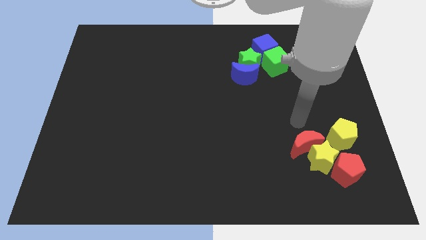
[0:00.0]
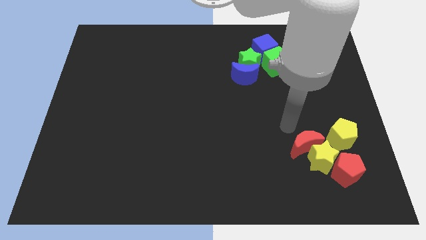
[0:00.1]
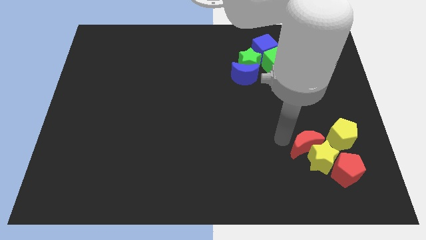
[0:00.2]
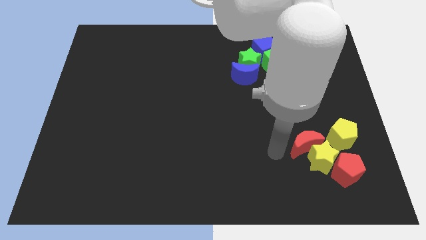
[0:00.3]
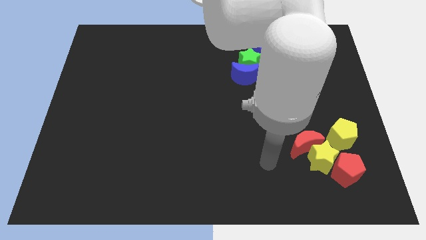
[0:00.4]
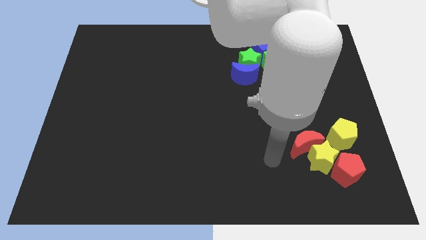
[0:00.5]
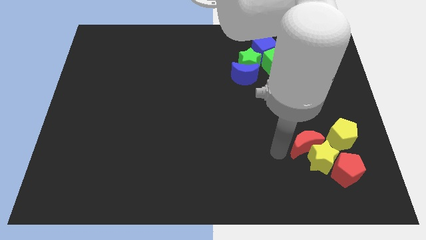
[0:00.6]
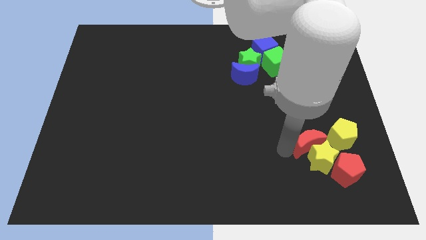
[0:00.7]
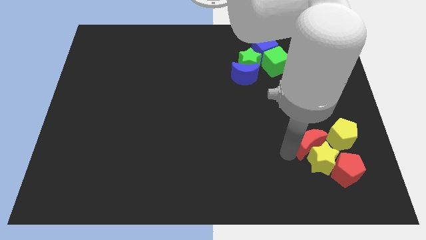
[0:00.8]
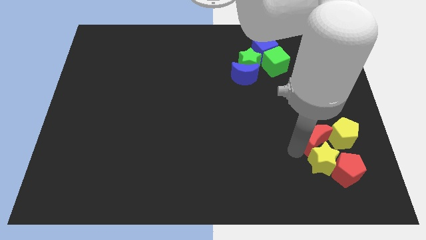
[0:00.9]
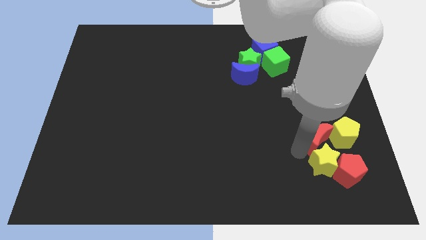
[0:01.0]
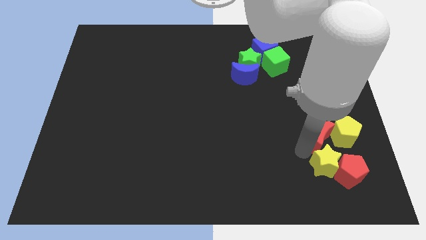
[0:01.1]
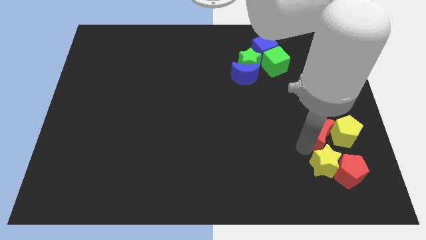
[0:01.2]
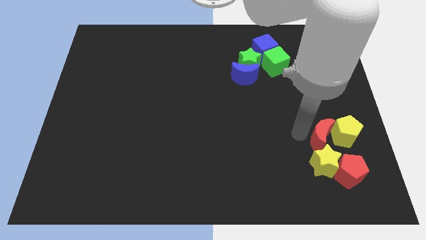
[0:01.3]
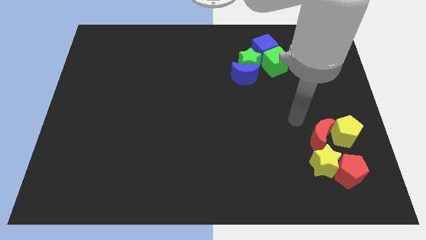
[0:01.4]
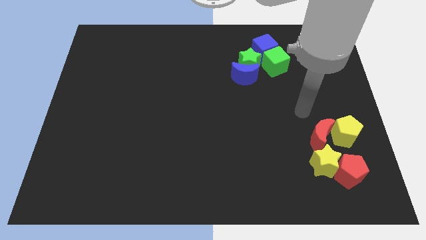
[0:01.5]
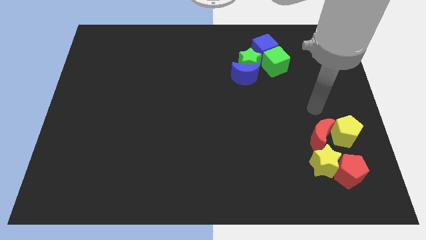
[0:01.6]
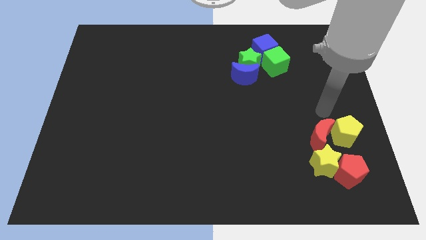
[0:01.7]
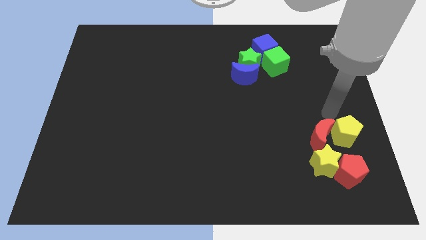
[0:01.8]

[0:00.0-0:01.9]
push red and yellow blocks into each other

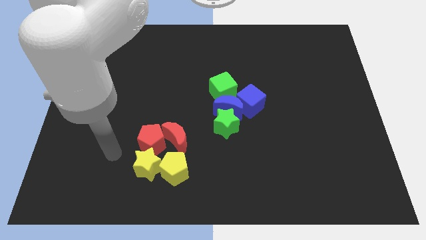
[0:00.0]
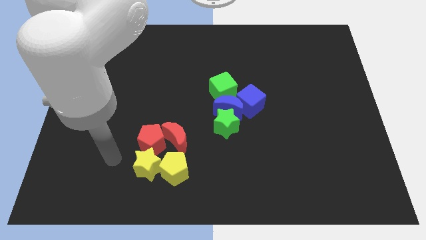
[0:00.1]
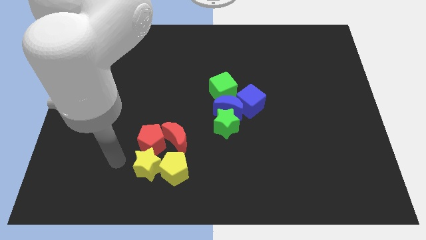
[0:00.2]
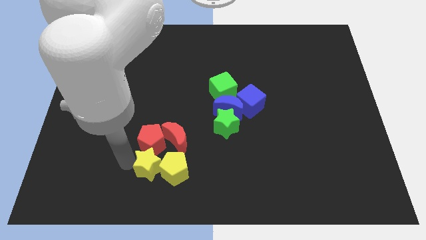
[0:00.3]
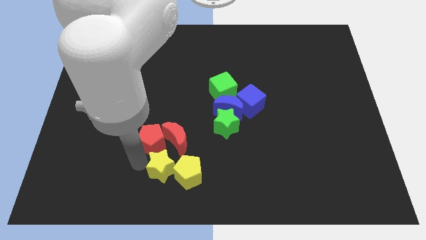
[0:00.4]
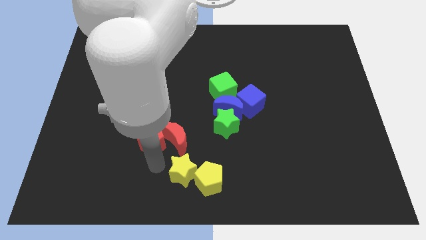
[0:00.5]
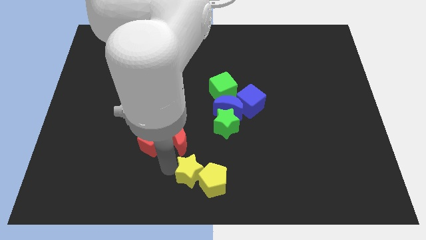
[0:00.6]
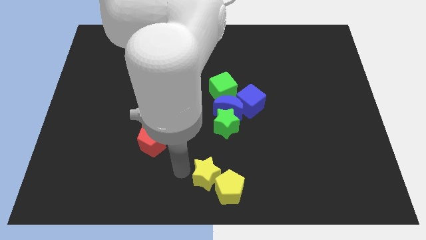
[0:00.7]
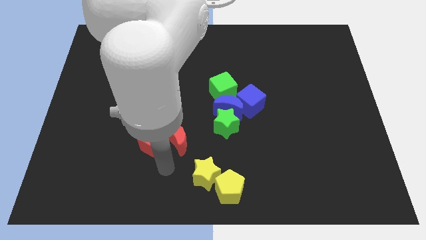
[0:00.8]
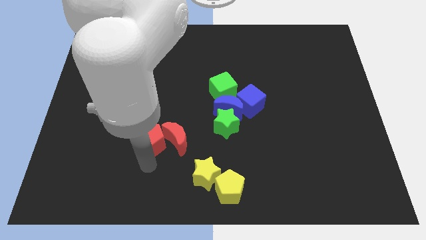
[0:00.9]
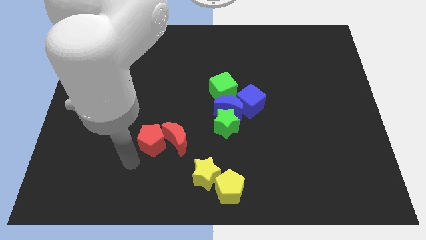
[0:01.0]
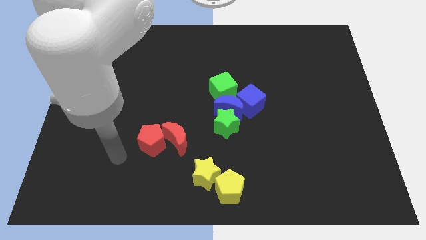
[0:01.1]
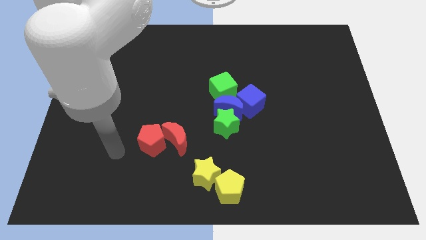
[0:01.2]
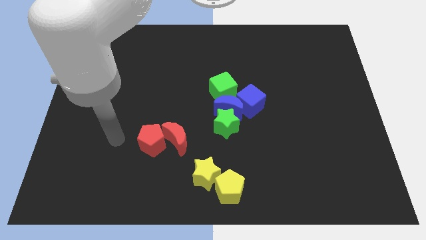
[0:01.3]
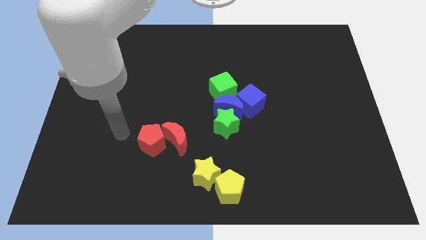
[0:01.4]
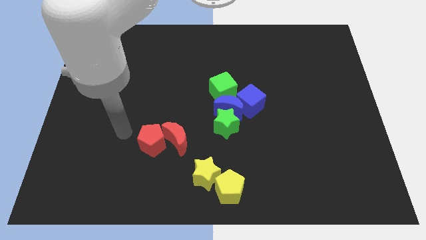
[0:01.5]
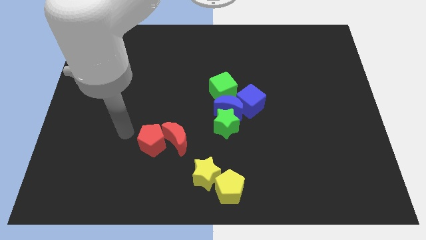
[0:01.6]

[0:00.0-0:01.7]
push the yellow star to the right side of the board with the yellow pentagon

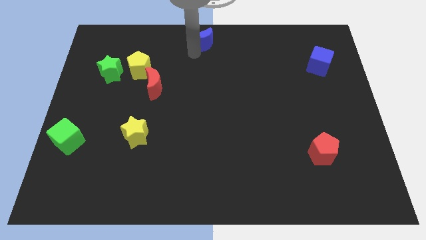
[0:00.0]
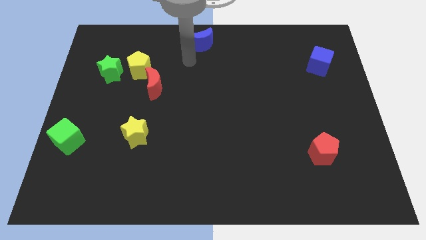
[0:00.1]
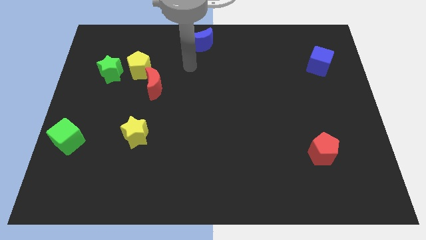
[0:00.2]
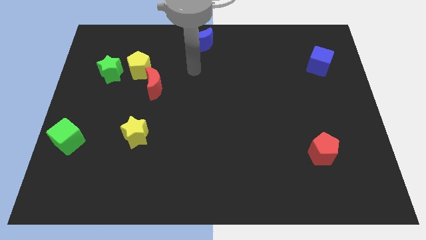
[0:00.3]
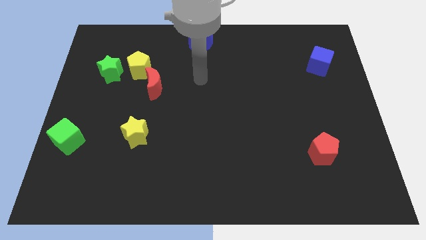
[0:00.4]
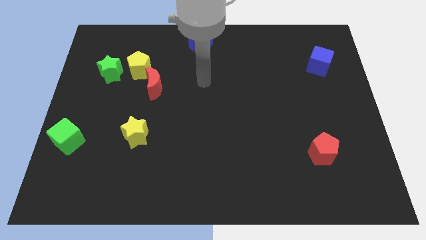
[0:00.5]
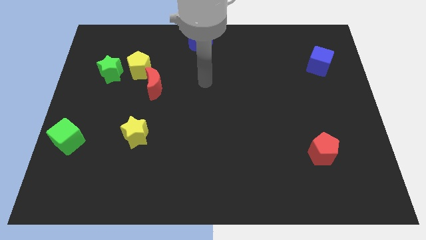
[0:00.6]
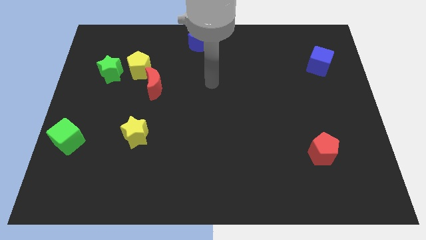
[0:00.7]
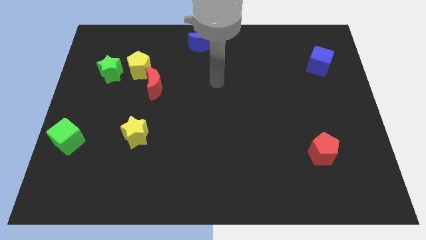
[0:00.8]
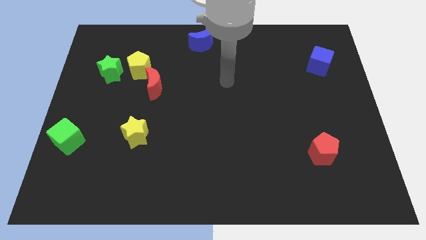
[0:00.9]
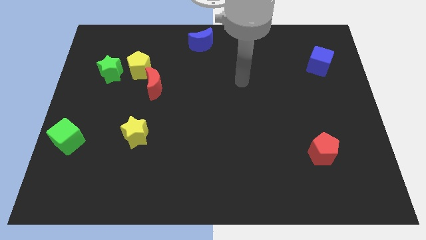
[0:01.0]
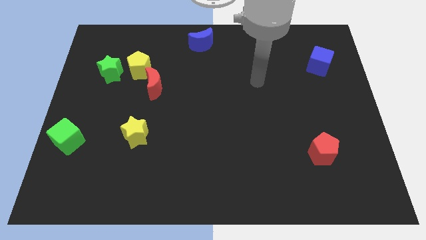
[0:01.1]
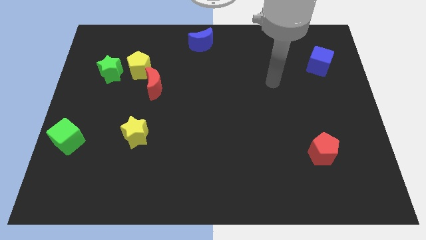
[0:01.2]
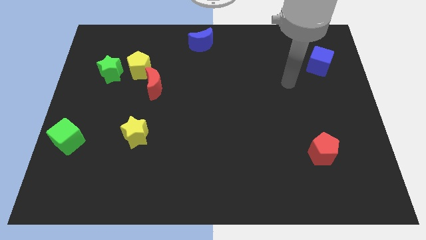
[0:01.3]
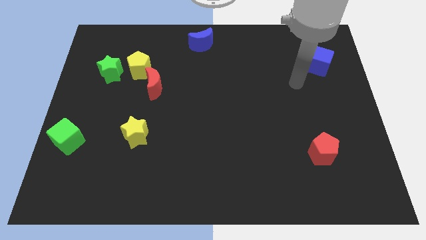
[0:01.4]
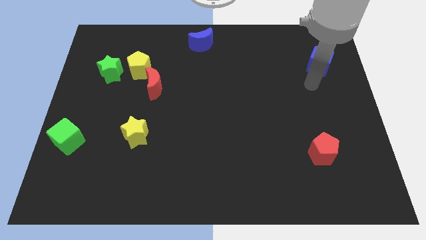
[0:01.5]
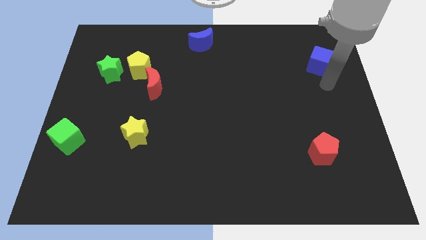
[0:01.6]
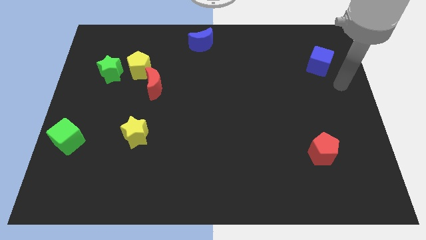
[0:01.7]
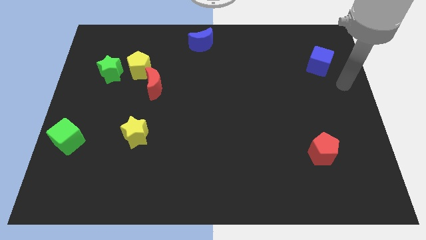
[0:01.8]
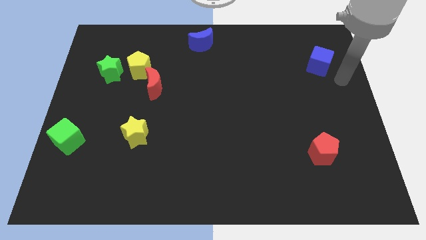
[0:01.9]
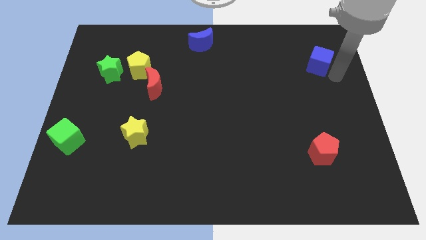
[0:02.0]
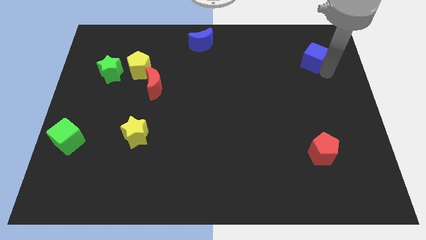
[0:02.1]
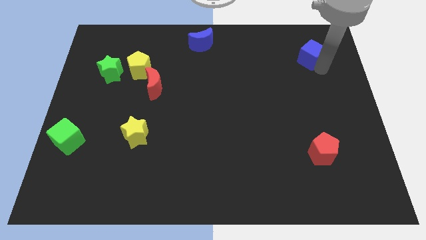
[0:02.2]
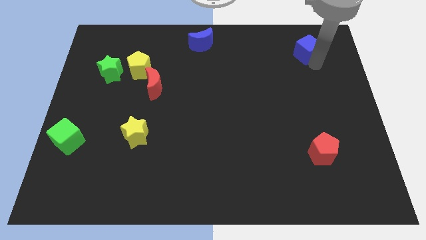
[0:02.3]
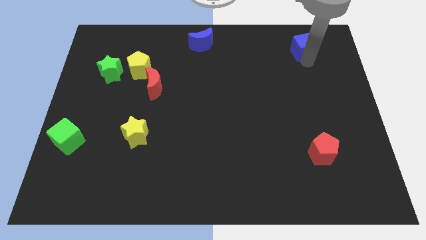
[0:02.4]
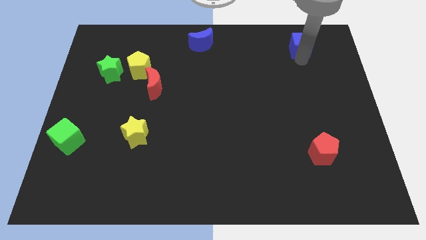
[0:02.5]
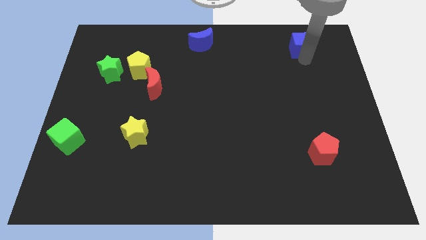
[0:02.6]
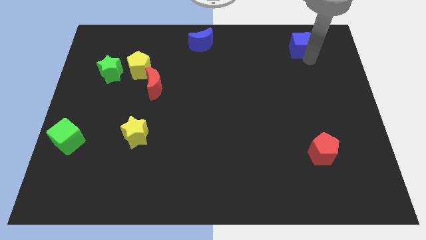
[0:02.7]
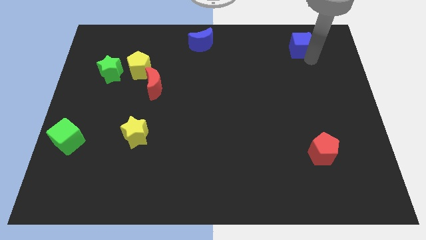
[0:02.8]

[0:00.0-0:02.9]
place blue cube to the right of blue moon

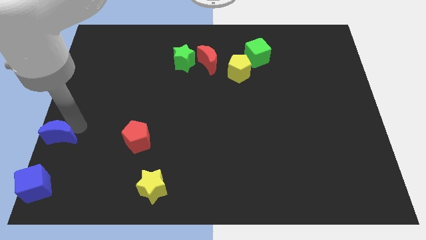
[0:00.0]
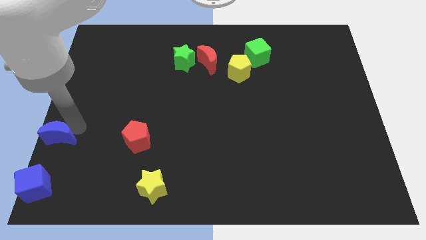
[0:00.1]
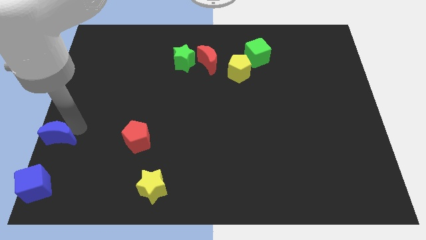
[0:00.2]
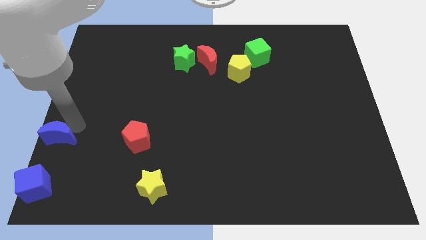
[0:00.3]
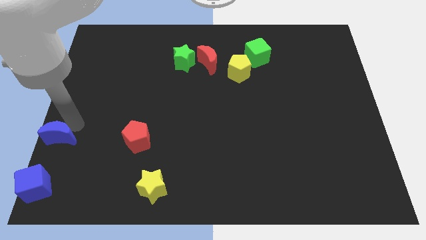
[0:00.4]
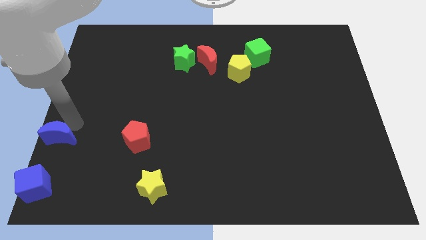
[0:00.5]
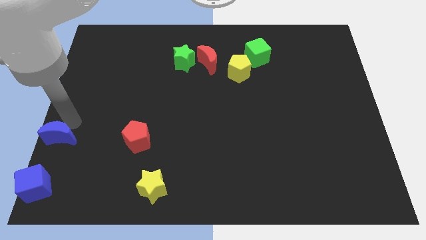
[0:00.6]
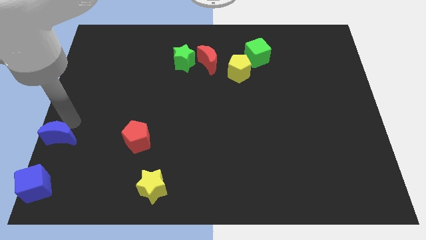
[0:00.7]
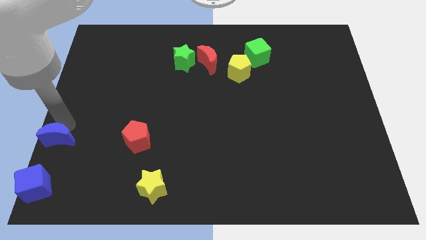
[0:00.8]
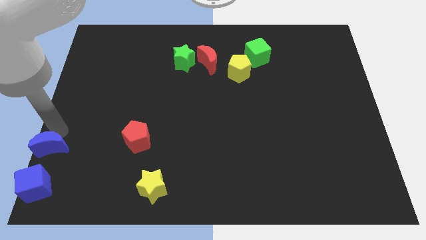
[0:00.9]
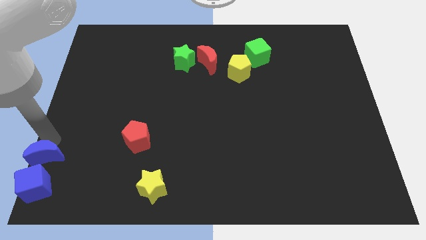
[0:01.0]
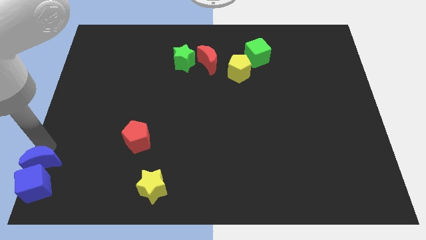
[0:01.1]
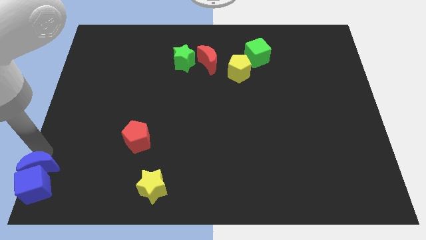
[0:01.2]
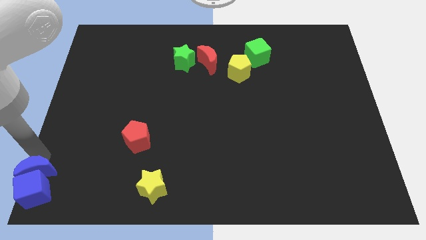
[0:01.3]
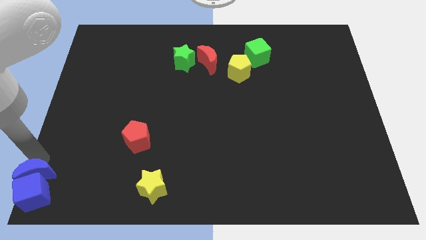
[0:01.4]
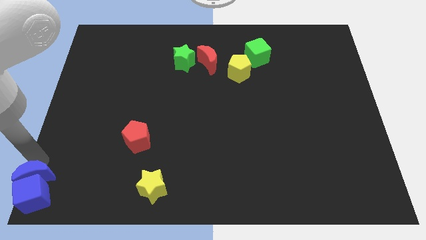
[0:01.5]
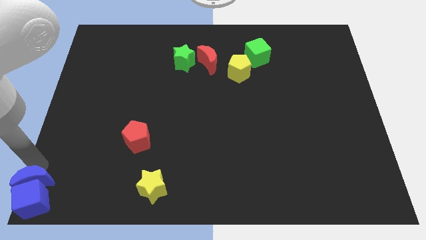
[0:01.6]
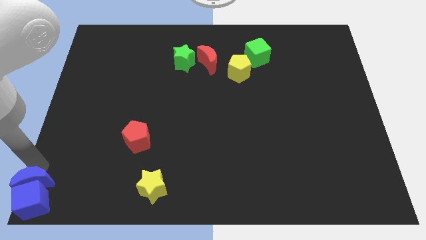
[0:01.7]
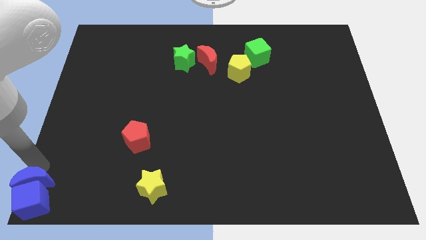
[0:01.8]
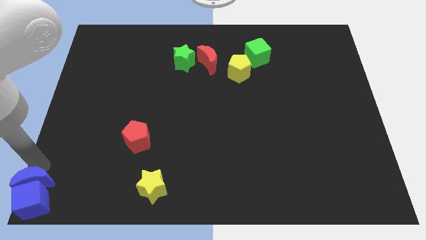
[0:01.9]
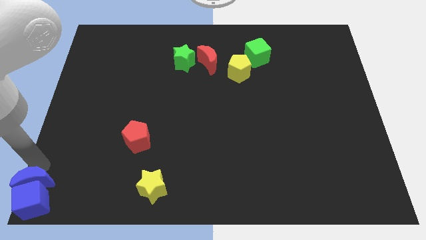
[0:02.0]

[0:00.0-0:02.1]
place the blue moon to the top side of the blue cube

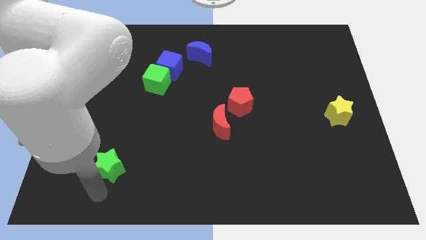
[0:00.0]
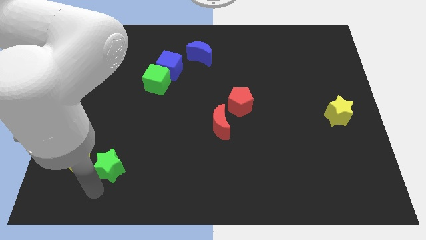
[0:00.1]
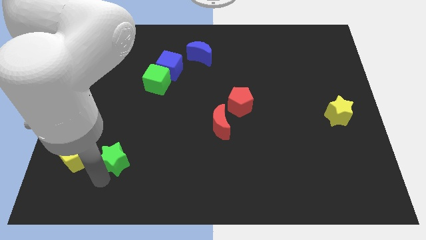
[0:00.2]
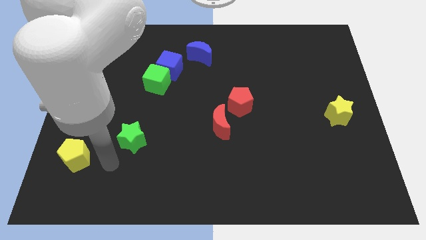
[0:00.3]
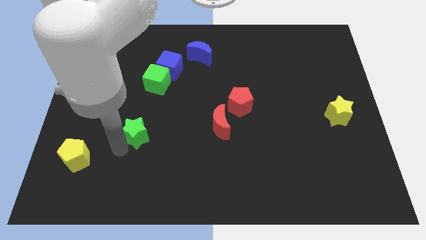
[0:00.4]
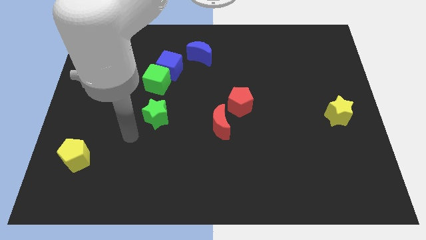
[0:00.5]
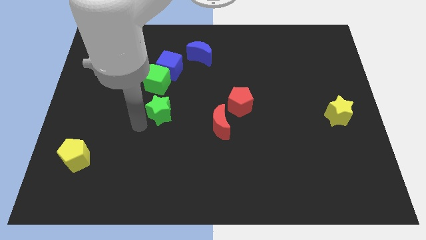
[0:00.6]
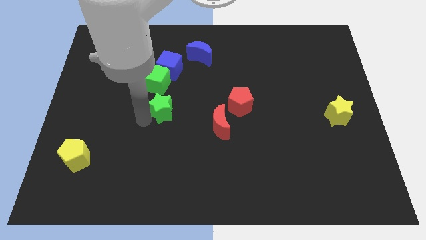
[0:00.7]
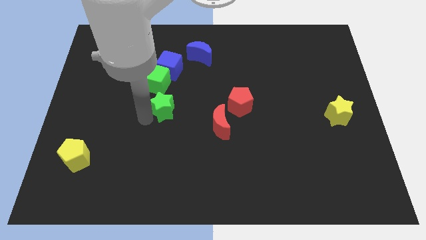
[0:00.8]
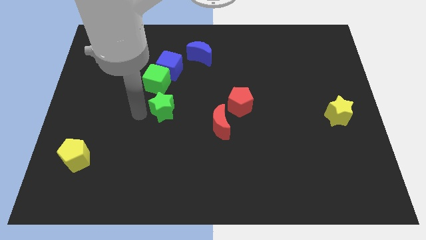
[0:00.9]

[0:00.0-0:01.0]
move green star towards green cube
